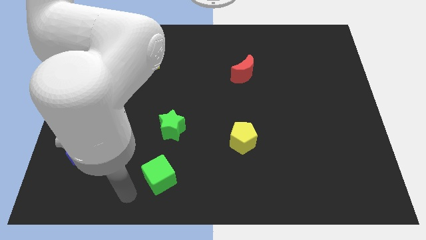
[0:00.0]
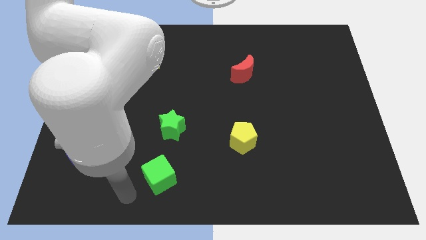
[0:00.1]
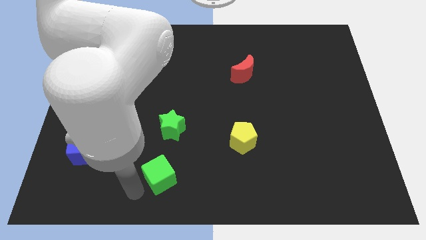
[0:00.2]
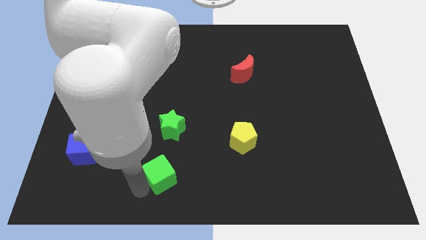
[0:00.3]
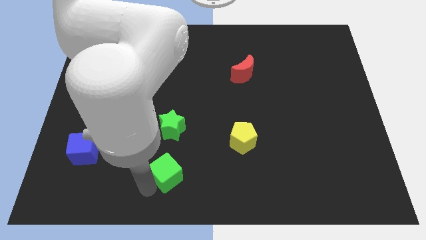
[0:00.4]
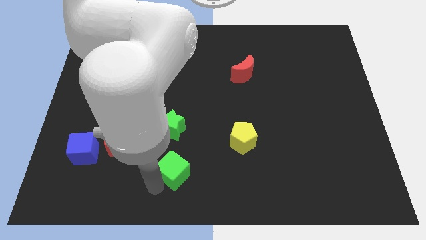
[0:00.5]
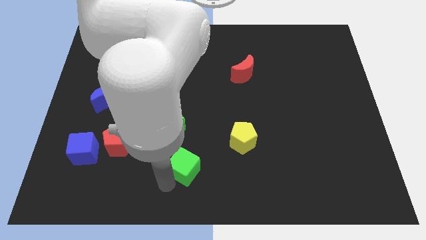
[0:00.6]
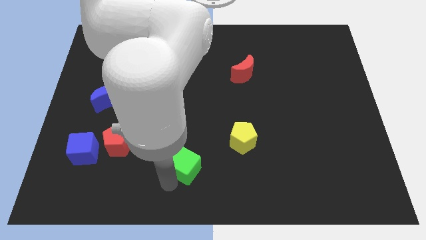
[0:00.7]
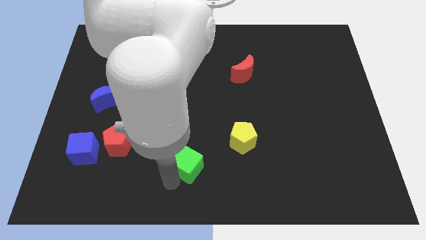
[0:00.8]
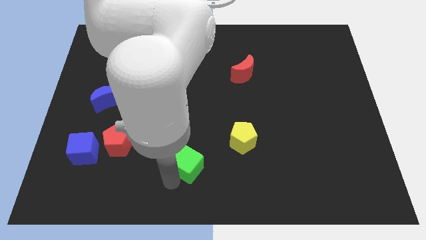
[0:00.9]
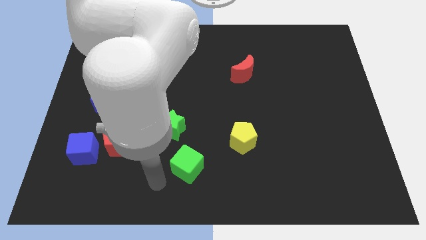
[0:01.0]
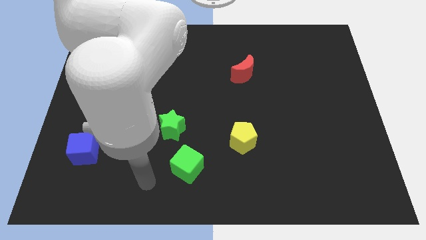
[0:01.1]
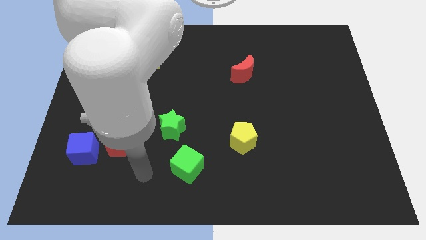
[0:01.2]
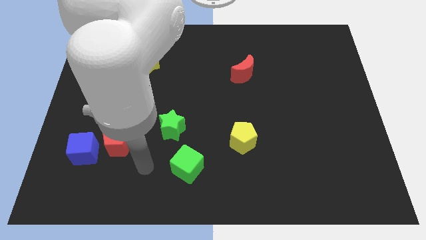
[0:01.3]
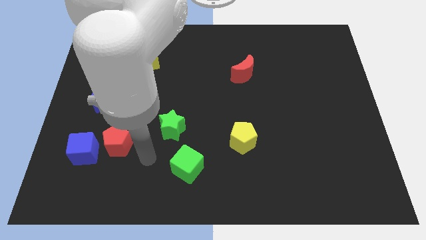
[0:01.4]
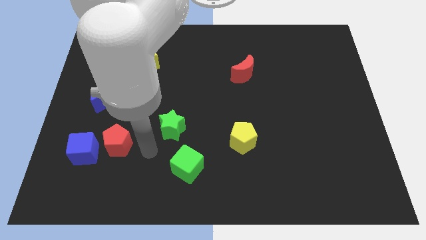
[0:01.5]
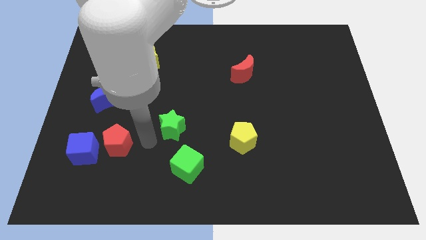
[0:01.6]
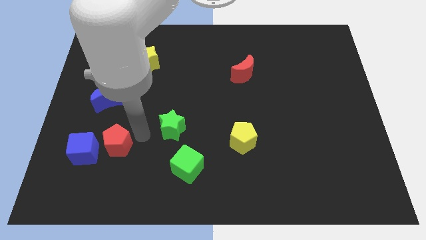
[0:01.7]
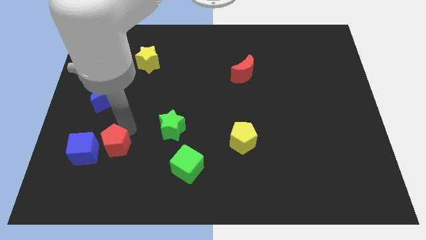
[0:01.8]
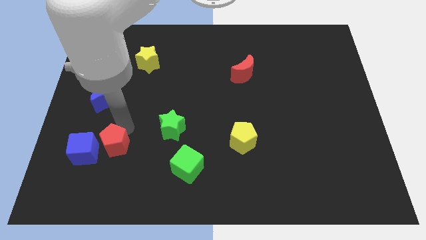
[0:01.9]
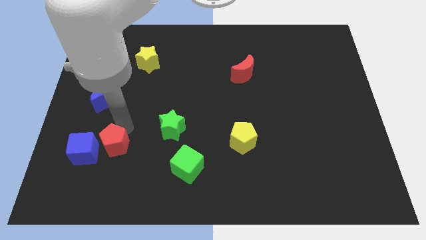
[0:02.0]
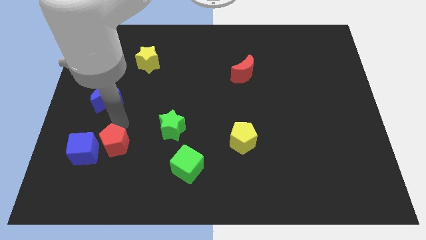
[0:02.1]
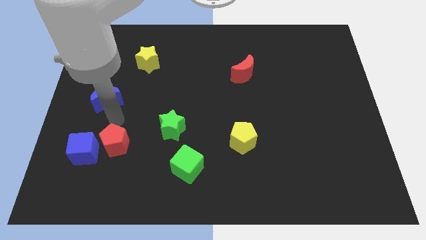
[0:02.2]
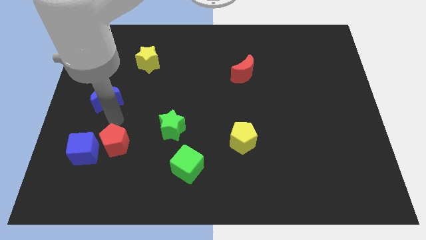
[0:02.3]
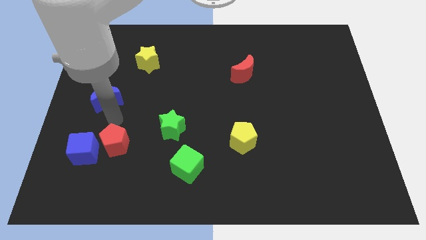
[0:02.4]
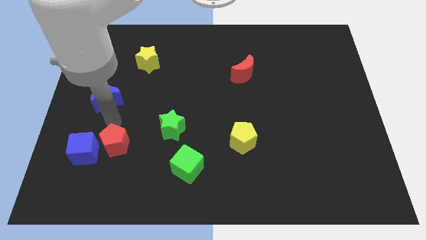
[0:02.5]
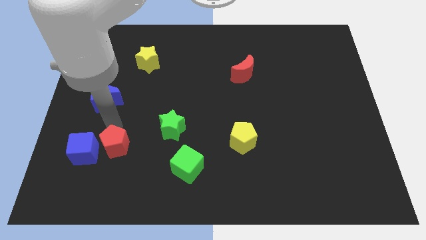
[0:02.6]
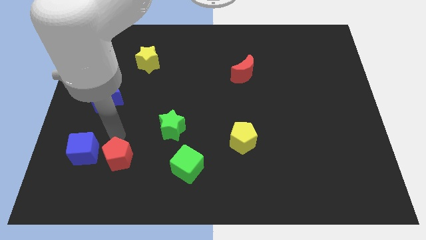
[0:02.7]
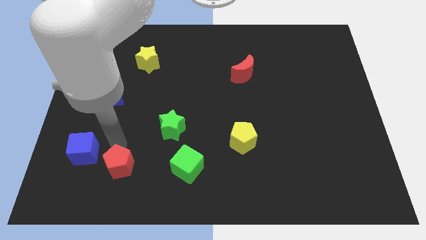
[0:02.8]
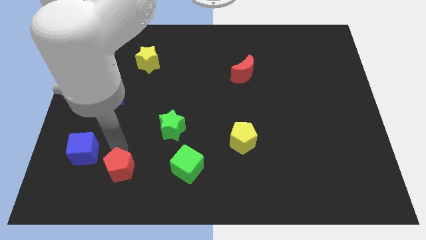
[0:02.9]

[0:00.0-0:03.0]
move the red pentagon parallel to the green cube

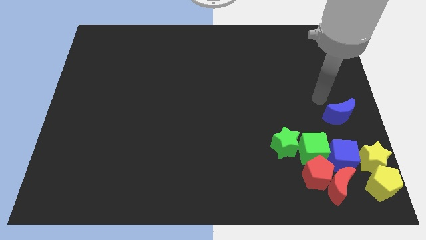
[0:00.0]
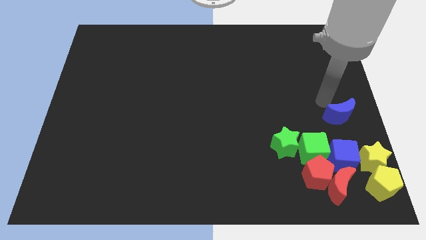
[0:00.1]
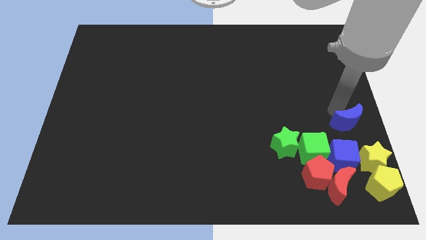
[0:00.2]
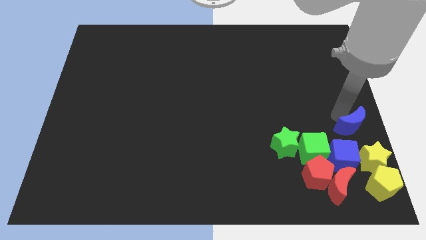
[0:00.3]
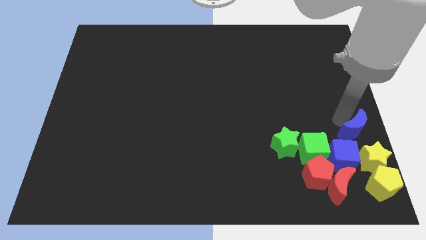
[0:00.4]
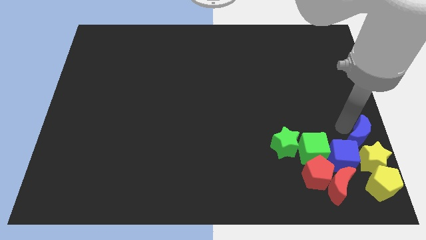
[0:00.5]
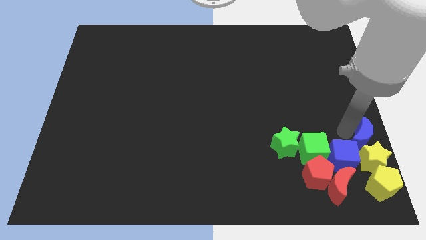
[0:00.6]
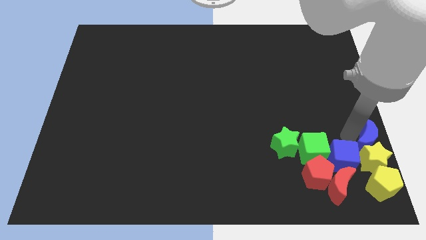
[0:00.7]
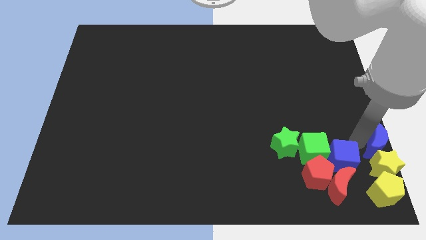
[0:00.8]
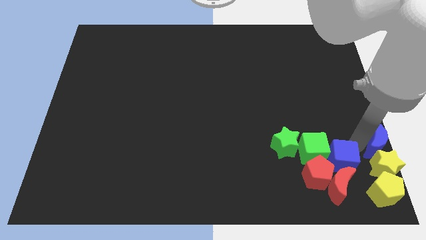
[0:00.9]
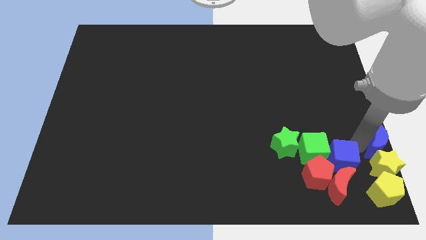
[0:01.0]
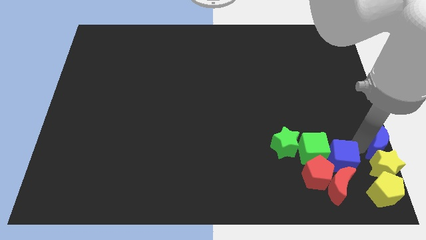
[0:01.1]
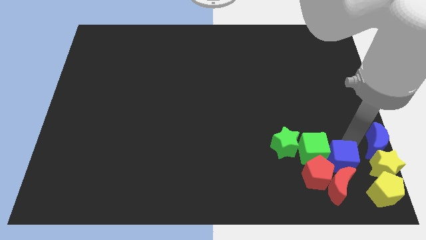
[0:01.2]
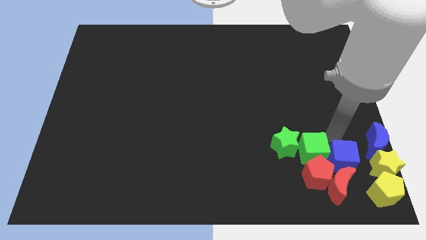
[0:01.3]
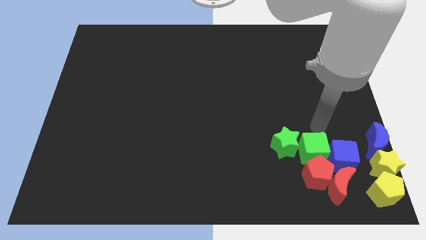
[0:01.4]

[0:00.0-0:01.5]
push the blue moon into the yellow star

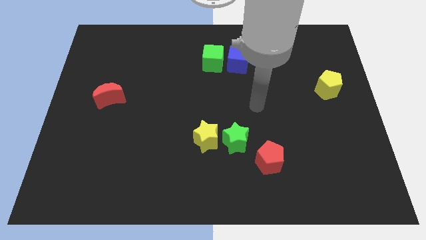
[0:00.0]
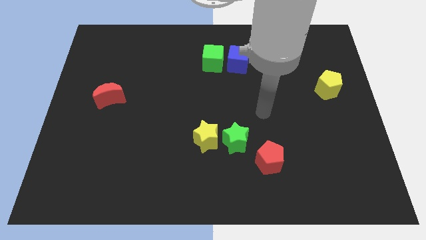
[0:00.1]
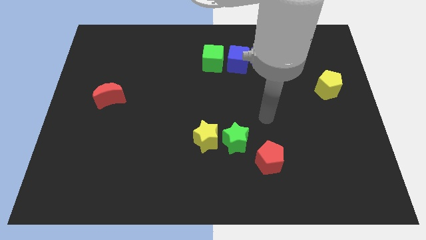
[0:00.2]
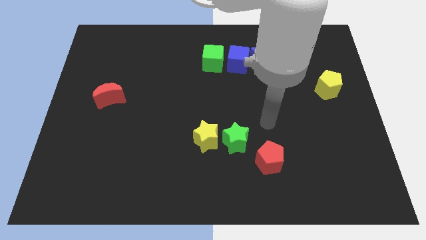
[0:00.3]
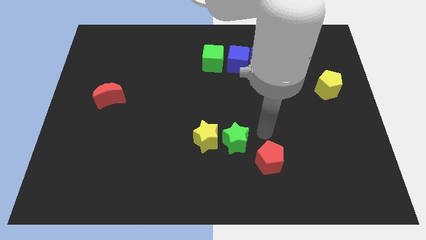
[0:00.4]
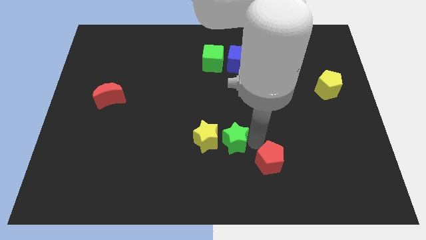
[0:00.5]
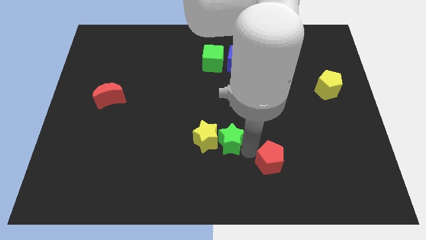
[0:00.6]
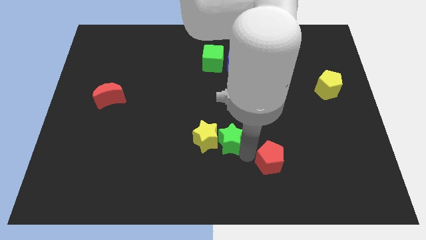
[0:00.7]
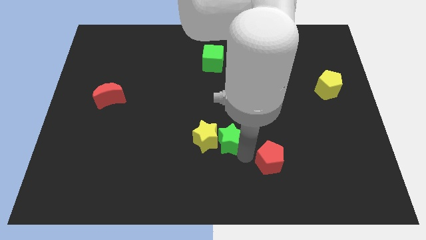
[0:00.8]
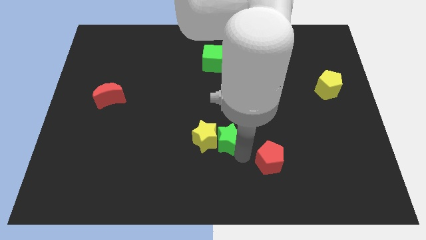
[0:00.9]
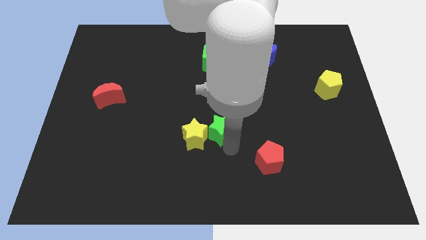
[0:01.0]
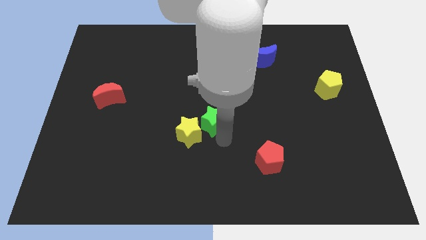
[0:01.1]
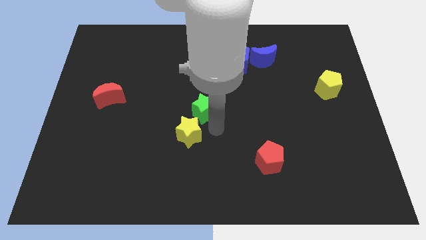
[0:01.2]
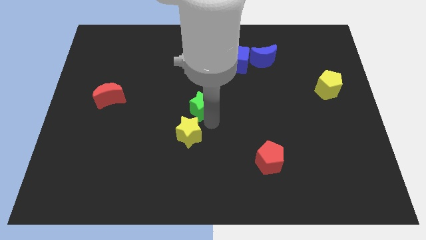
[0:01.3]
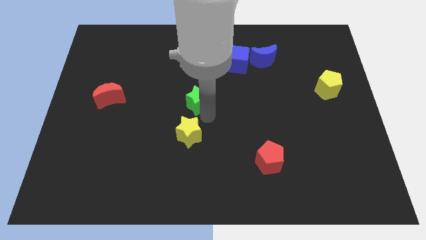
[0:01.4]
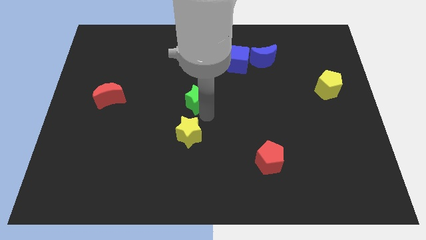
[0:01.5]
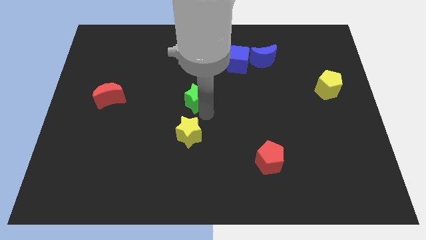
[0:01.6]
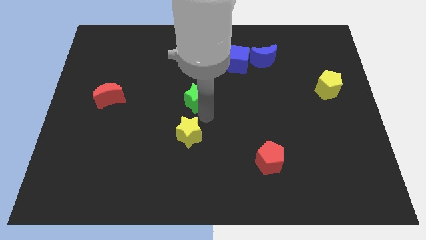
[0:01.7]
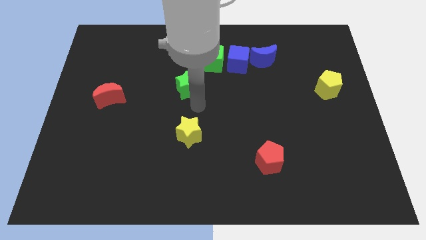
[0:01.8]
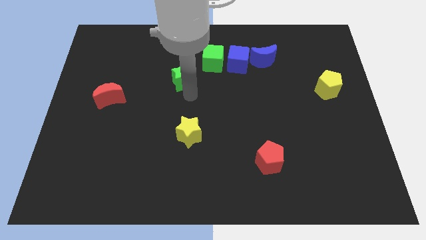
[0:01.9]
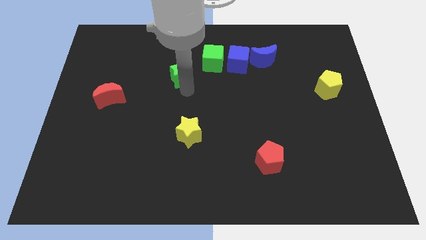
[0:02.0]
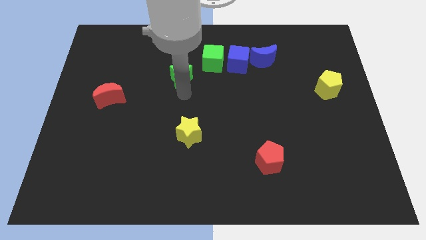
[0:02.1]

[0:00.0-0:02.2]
place the green star above the yellow star

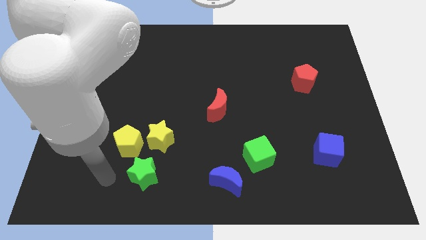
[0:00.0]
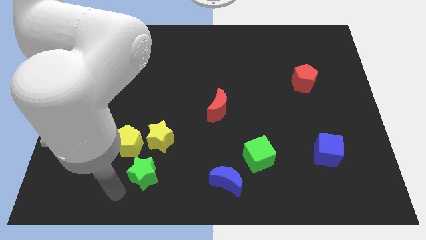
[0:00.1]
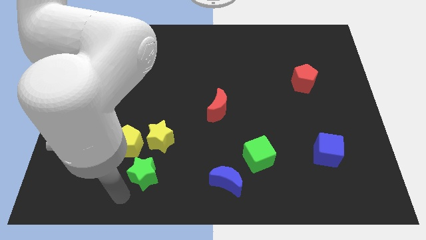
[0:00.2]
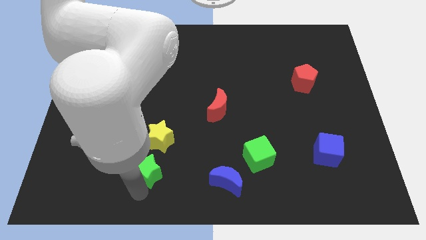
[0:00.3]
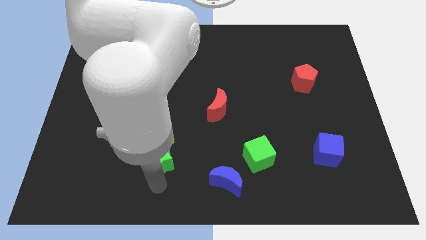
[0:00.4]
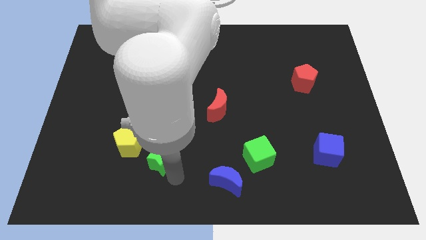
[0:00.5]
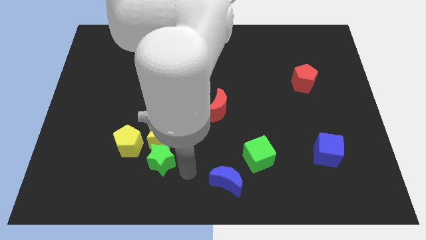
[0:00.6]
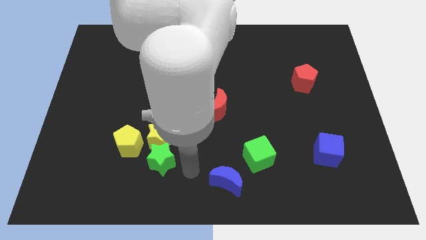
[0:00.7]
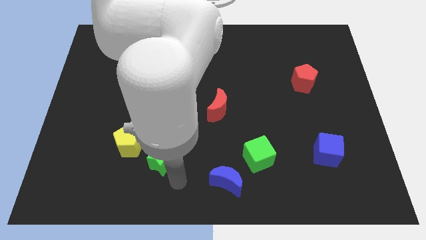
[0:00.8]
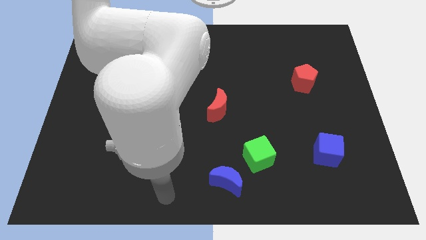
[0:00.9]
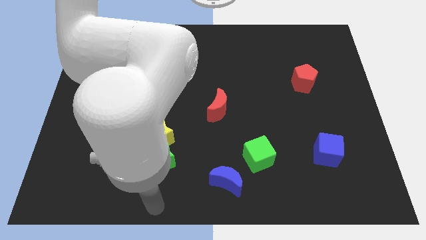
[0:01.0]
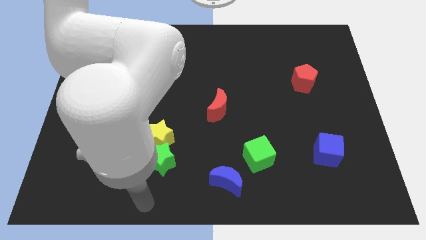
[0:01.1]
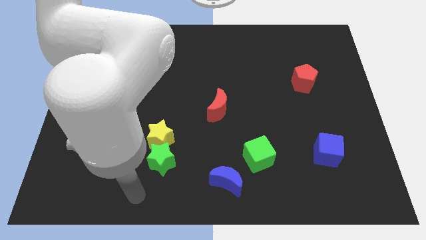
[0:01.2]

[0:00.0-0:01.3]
push the green star to the bottom of the yellow star

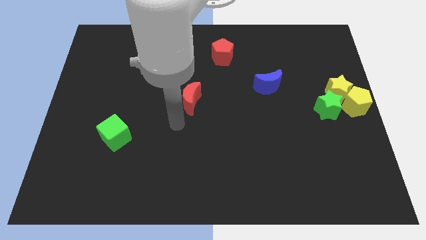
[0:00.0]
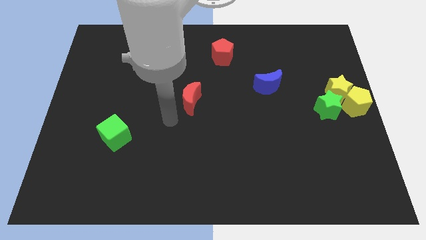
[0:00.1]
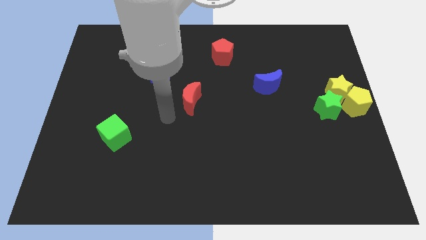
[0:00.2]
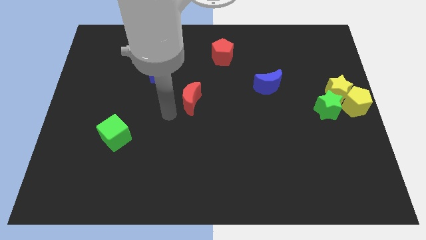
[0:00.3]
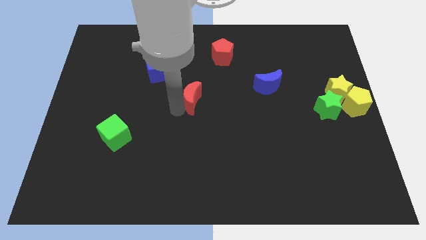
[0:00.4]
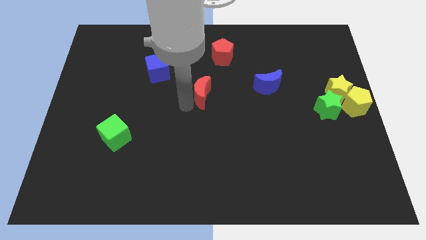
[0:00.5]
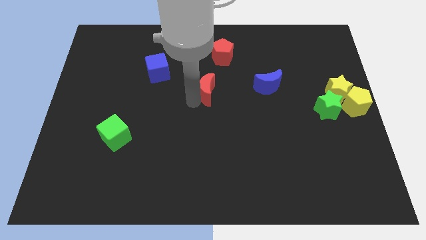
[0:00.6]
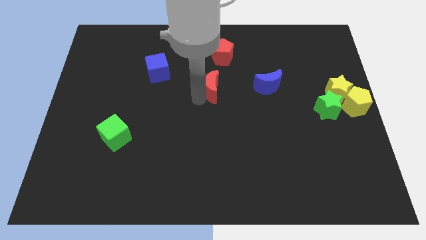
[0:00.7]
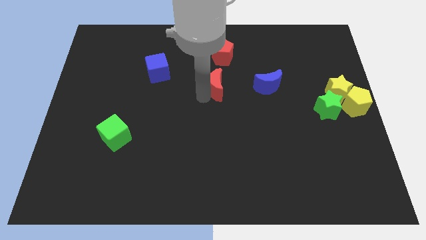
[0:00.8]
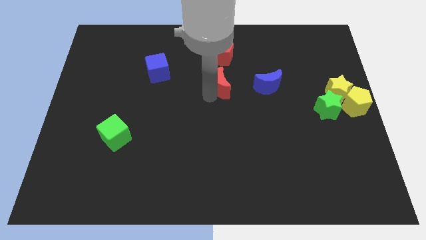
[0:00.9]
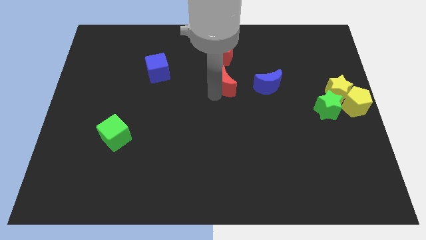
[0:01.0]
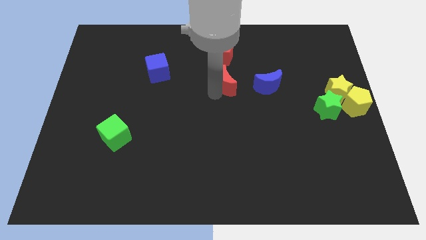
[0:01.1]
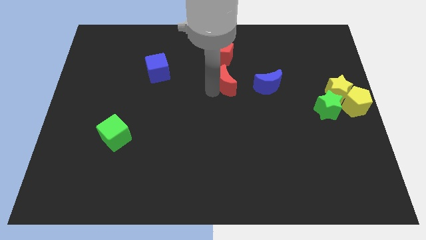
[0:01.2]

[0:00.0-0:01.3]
place the red moon to the bottom of the red pentagon
